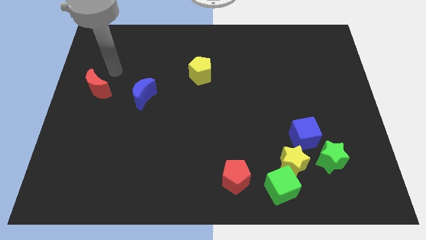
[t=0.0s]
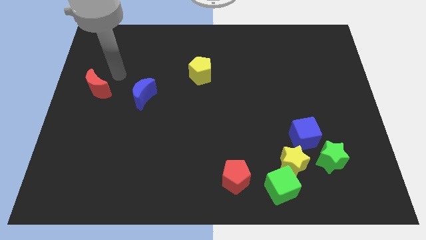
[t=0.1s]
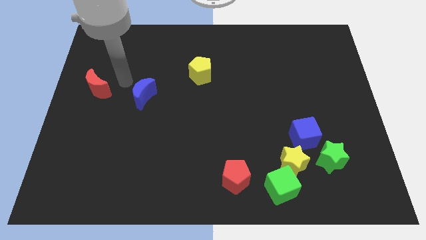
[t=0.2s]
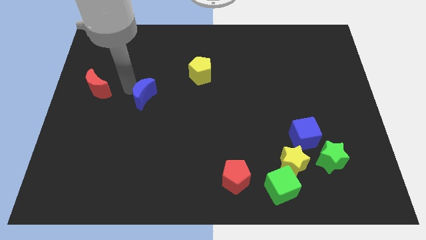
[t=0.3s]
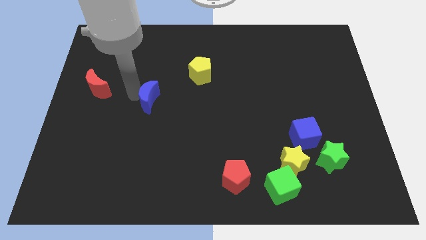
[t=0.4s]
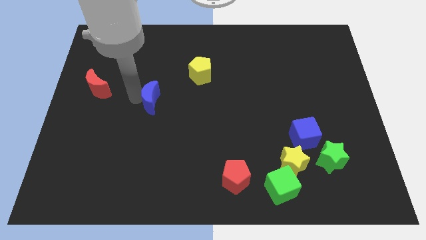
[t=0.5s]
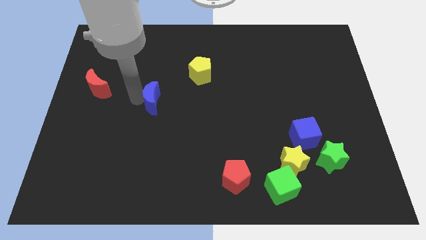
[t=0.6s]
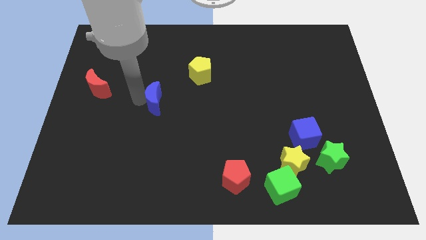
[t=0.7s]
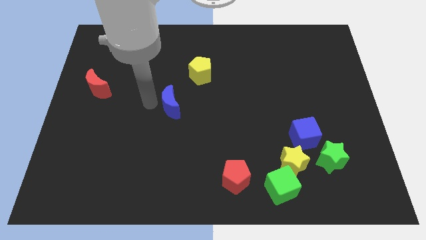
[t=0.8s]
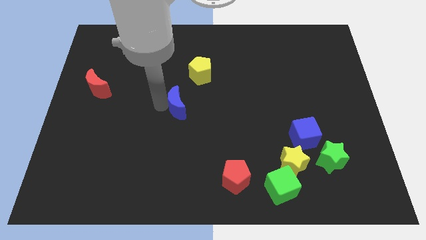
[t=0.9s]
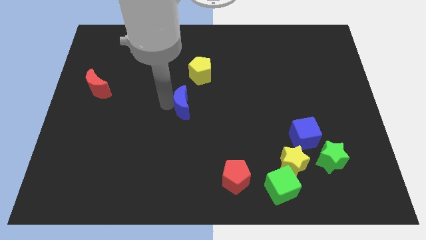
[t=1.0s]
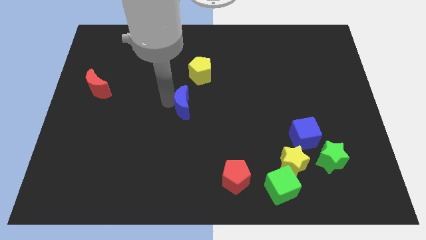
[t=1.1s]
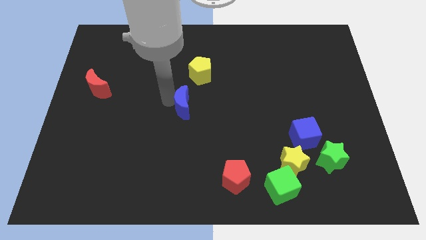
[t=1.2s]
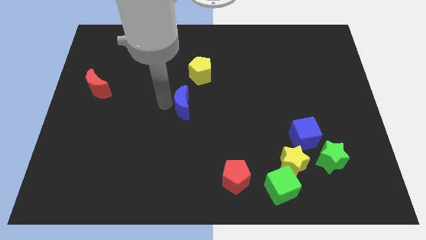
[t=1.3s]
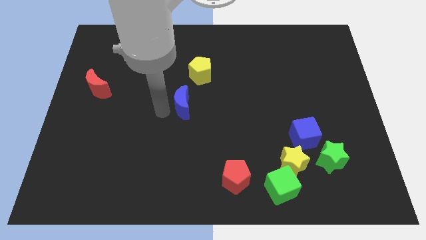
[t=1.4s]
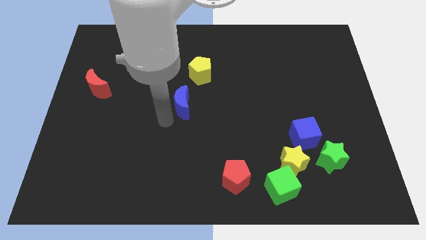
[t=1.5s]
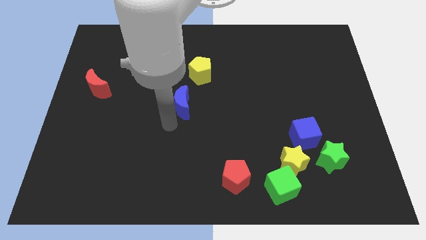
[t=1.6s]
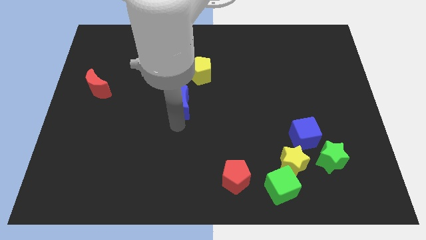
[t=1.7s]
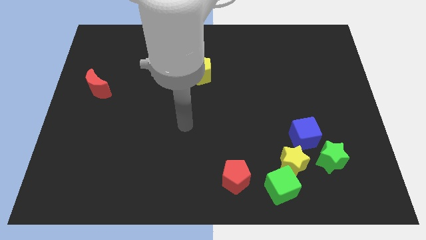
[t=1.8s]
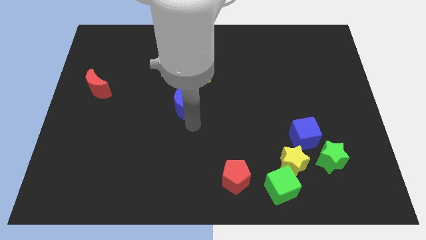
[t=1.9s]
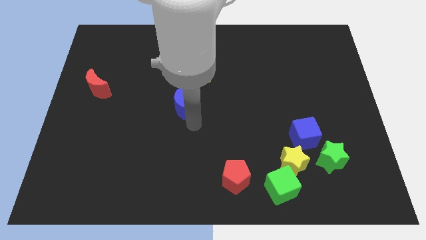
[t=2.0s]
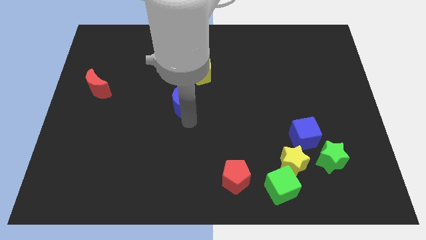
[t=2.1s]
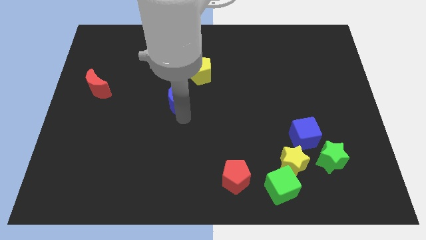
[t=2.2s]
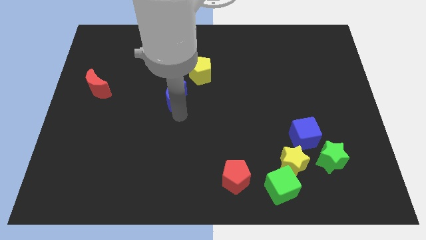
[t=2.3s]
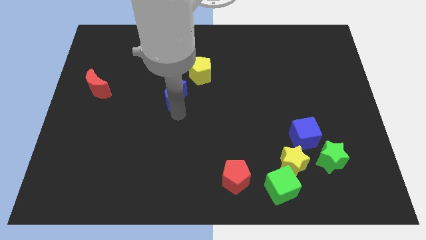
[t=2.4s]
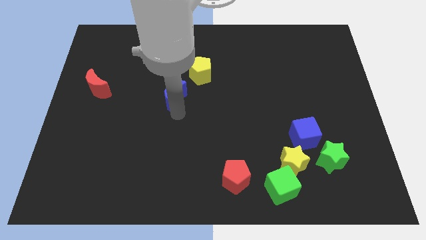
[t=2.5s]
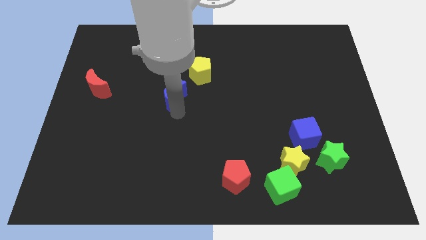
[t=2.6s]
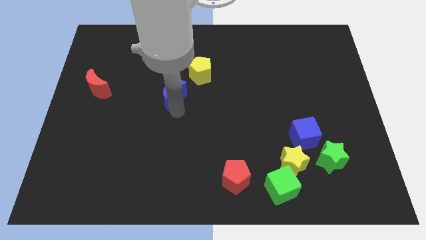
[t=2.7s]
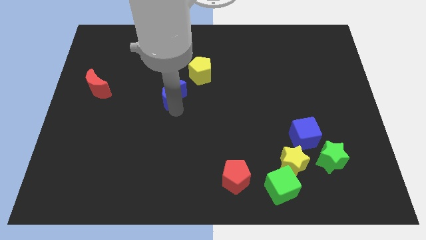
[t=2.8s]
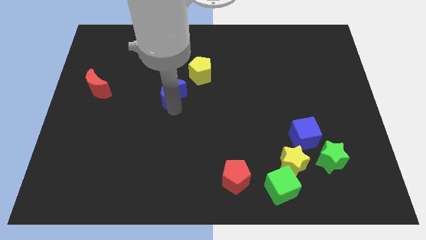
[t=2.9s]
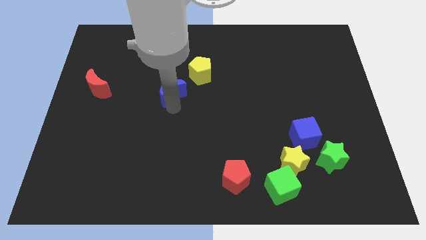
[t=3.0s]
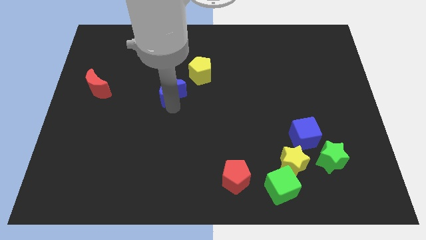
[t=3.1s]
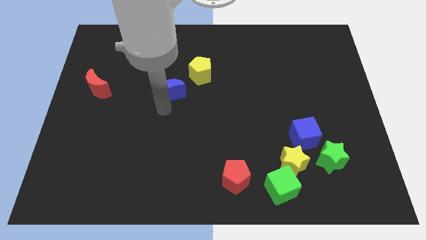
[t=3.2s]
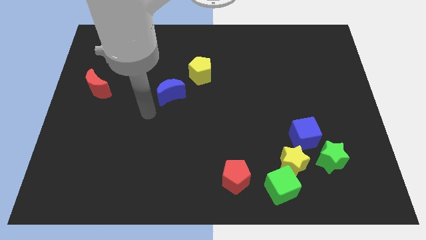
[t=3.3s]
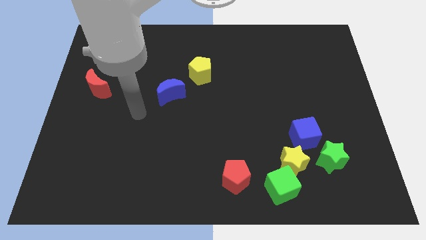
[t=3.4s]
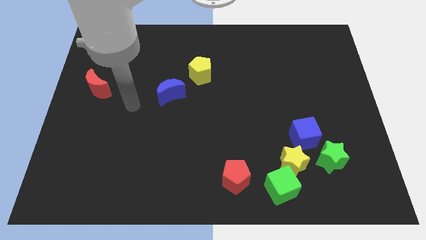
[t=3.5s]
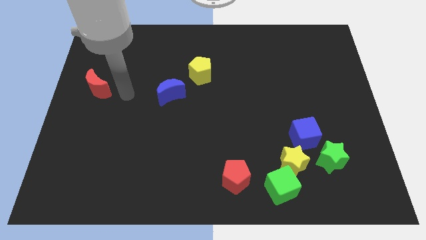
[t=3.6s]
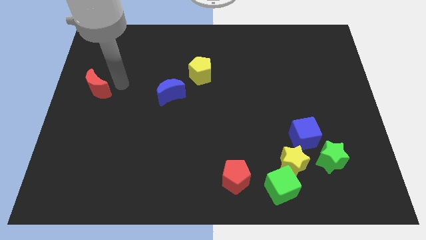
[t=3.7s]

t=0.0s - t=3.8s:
push the blue crescent to the left of the yellow pentagon

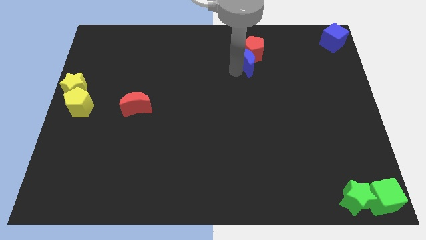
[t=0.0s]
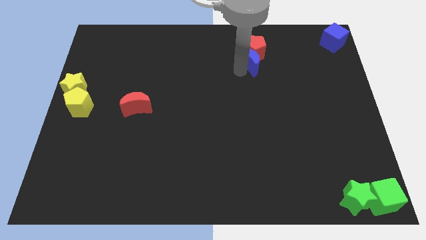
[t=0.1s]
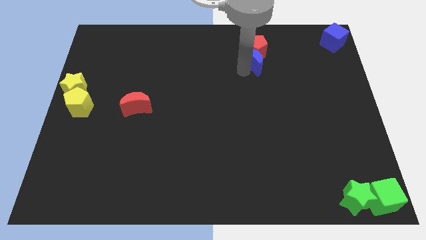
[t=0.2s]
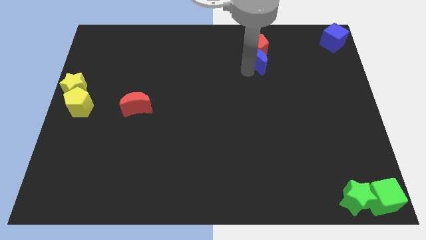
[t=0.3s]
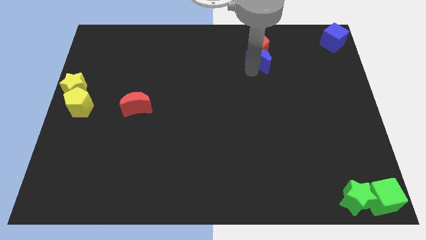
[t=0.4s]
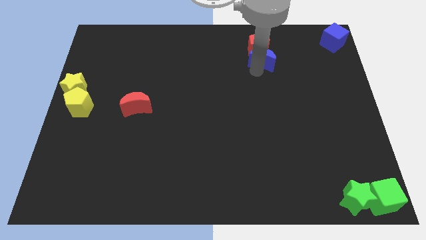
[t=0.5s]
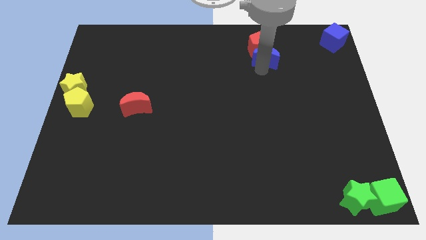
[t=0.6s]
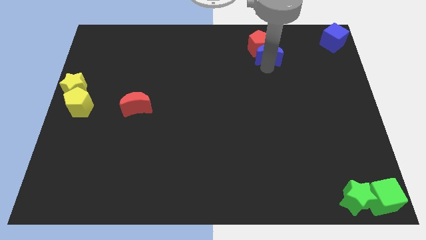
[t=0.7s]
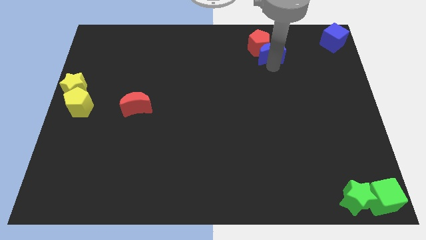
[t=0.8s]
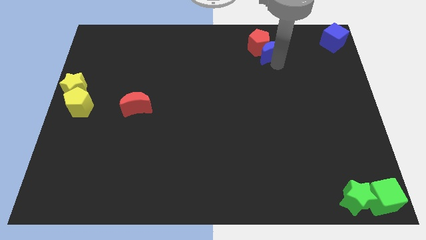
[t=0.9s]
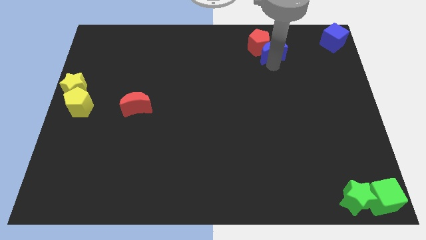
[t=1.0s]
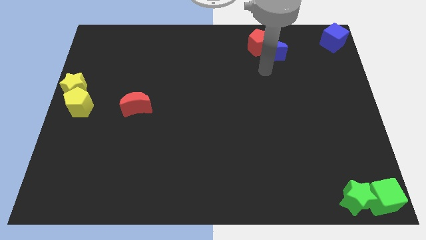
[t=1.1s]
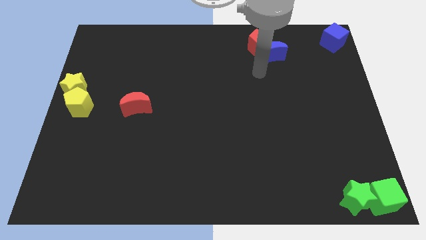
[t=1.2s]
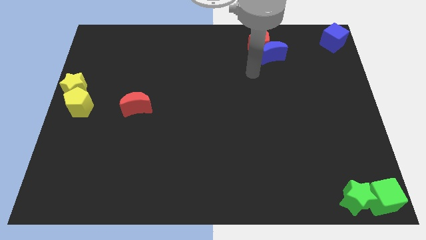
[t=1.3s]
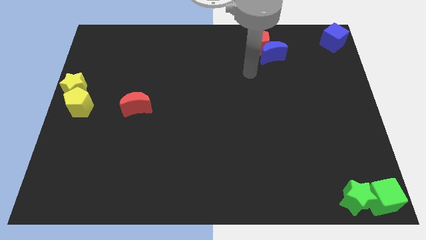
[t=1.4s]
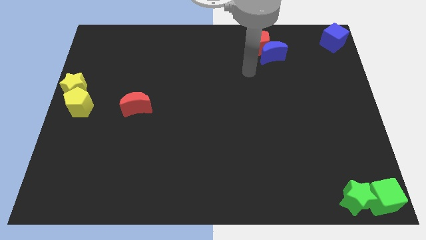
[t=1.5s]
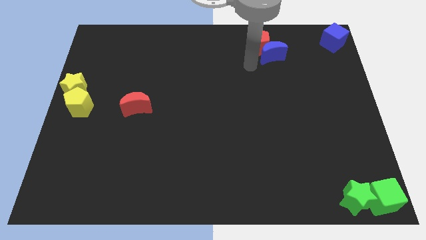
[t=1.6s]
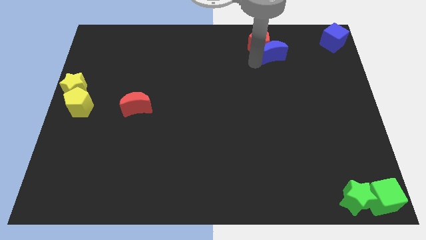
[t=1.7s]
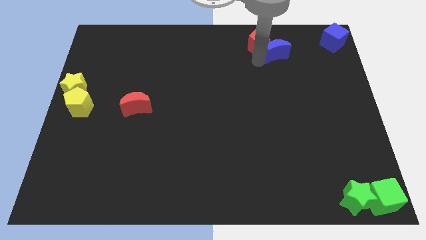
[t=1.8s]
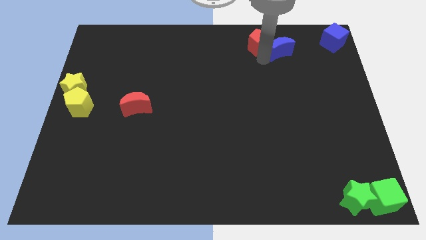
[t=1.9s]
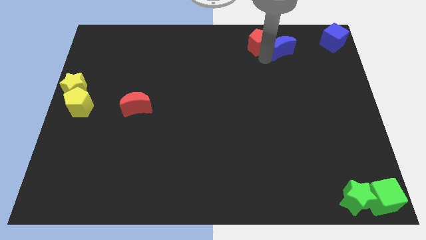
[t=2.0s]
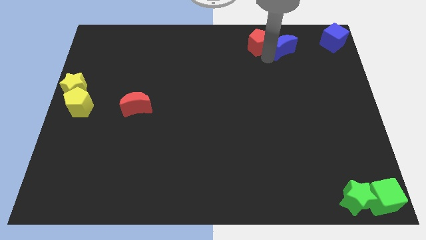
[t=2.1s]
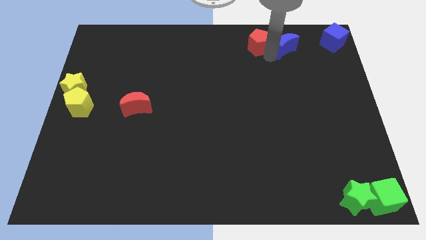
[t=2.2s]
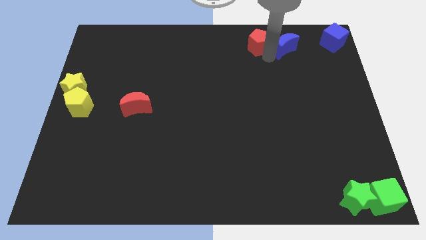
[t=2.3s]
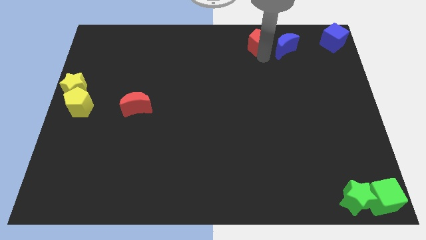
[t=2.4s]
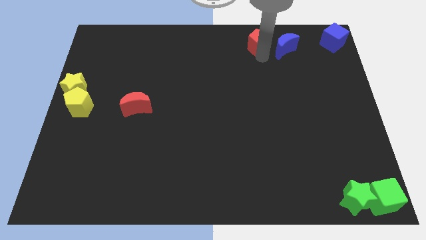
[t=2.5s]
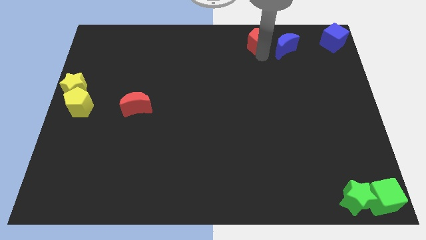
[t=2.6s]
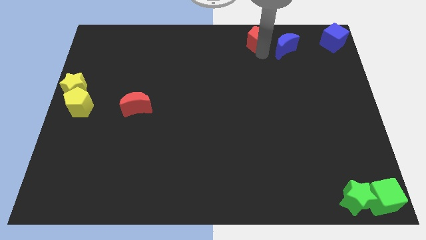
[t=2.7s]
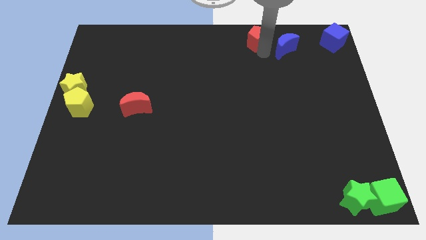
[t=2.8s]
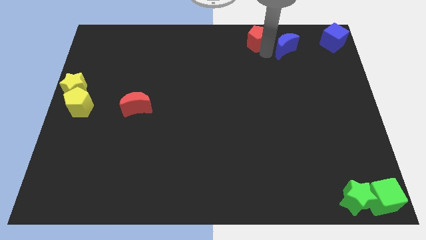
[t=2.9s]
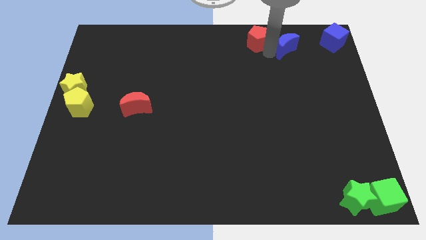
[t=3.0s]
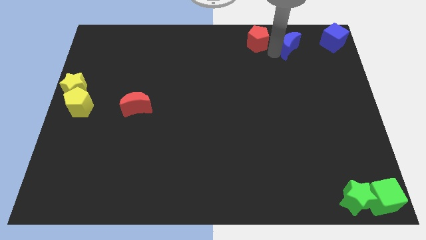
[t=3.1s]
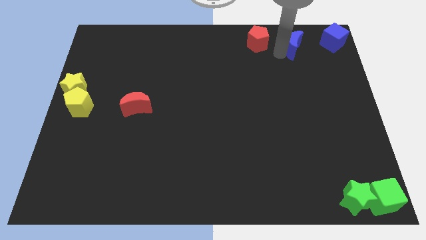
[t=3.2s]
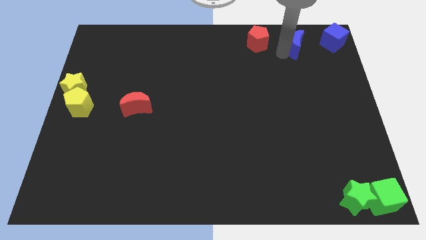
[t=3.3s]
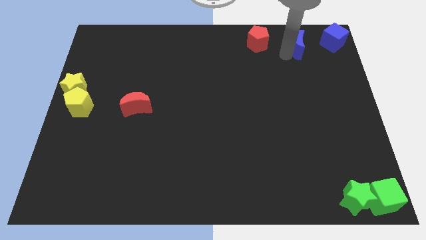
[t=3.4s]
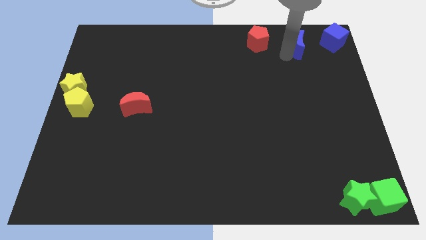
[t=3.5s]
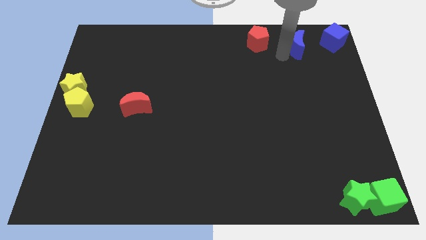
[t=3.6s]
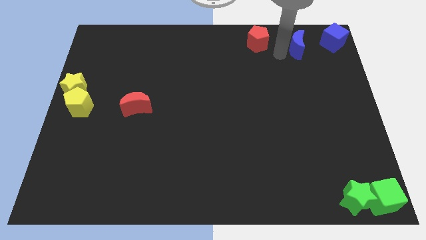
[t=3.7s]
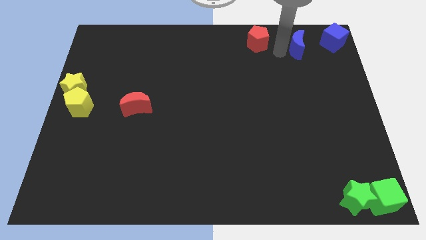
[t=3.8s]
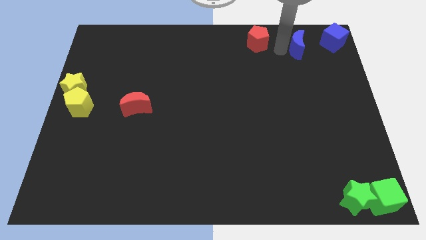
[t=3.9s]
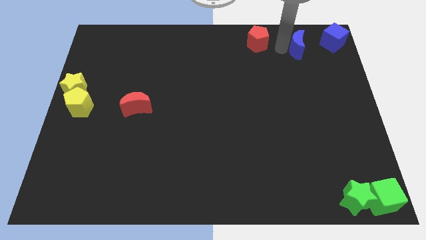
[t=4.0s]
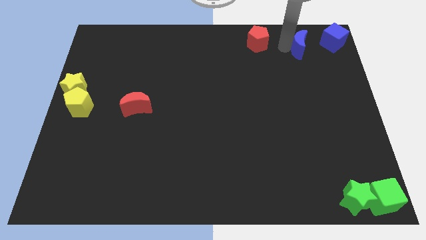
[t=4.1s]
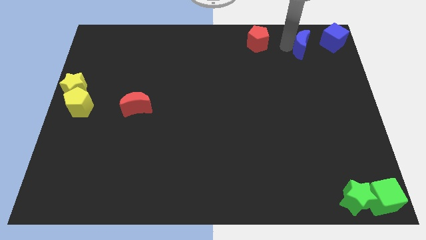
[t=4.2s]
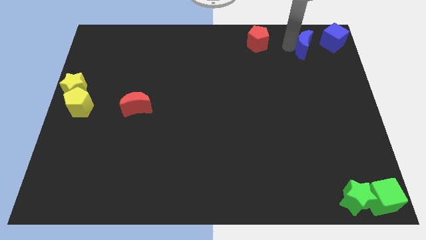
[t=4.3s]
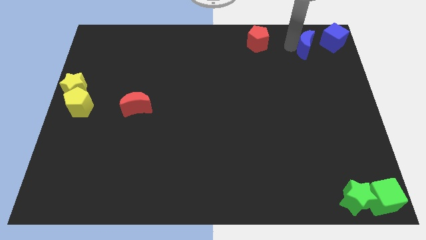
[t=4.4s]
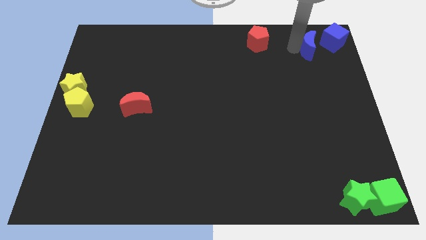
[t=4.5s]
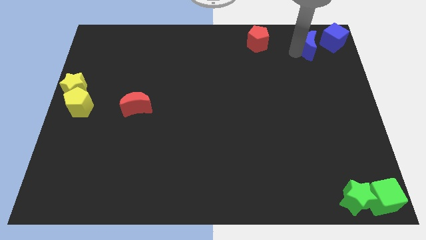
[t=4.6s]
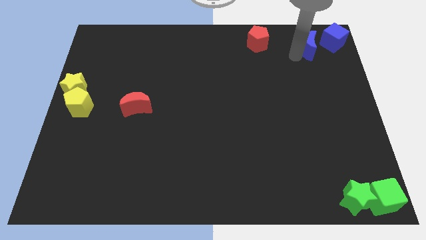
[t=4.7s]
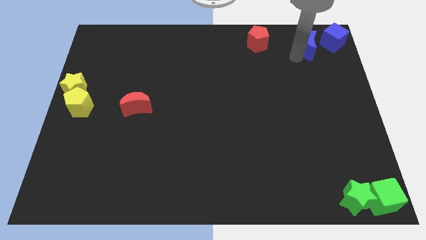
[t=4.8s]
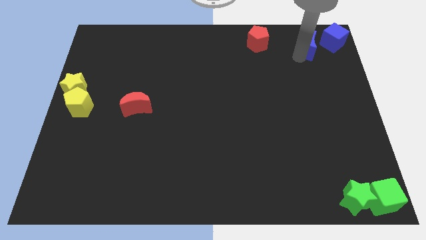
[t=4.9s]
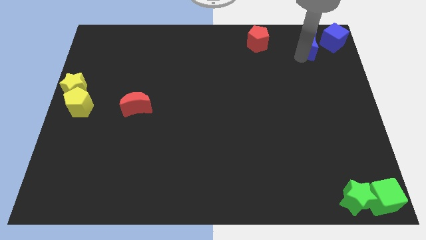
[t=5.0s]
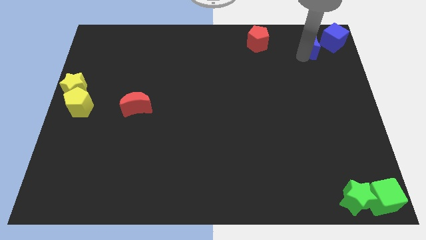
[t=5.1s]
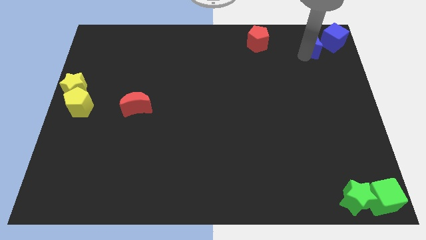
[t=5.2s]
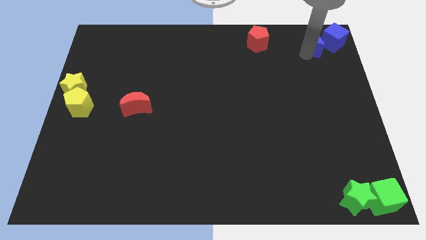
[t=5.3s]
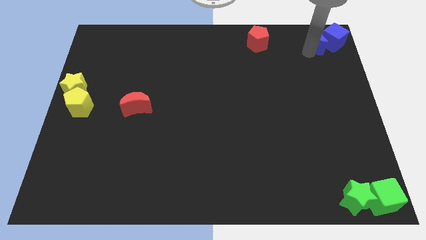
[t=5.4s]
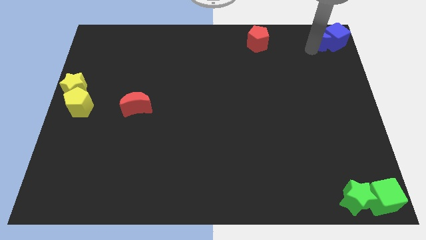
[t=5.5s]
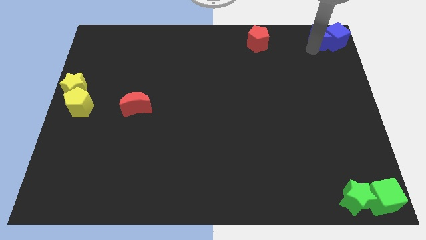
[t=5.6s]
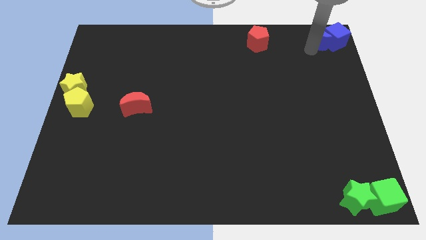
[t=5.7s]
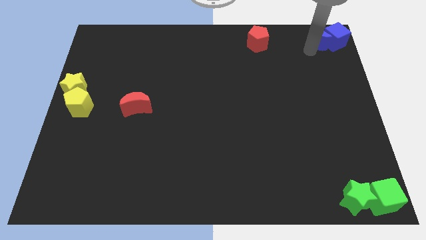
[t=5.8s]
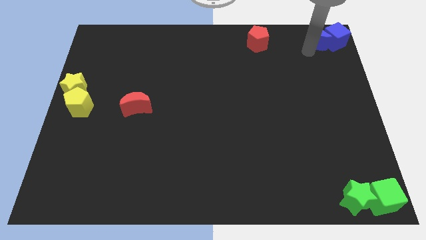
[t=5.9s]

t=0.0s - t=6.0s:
push the blue crescent into the blue cube
